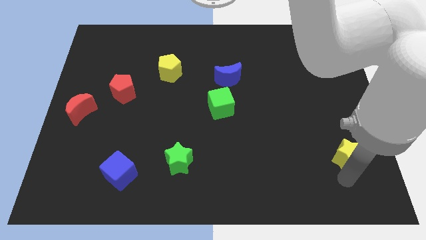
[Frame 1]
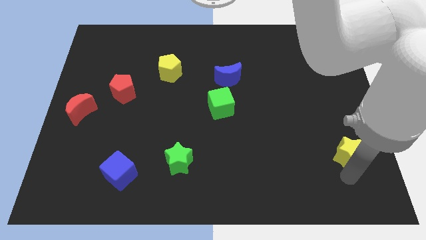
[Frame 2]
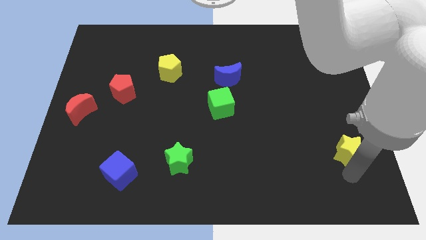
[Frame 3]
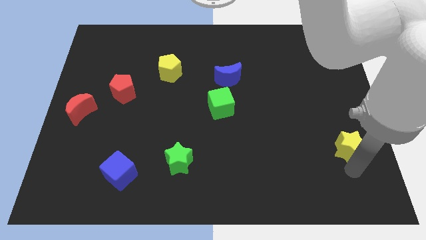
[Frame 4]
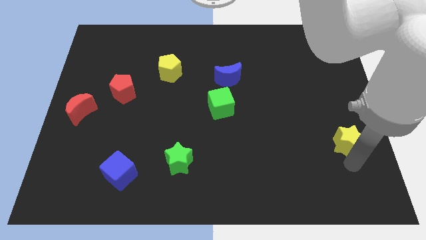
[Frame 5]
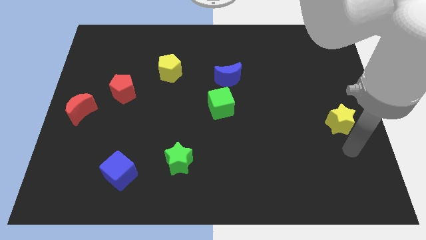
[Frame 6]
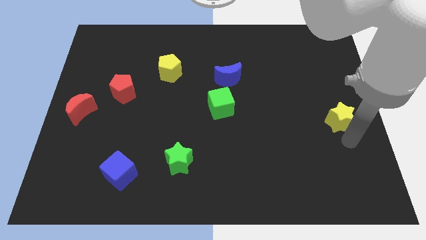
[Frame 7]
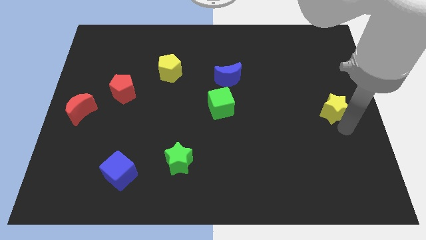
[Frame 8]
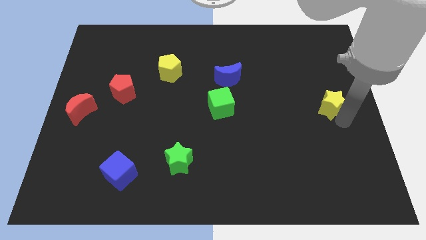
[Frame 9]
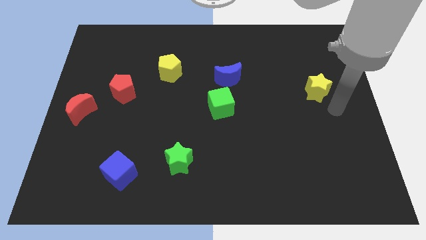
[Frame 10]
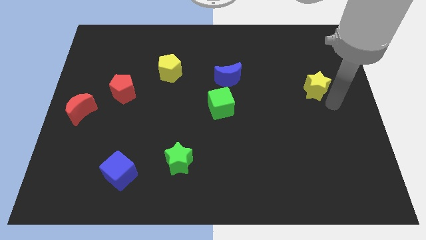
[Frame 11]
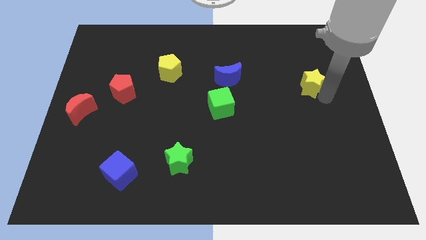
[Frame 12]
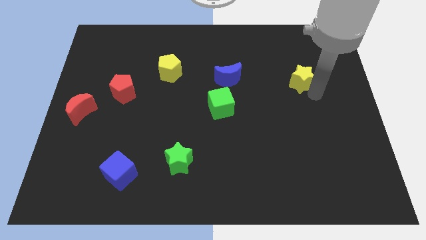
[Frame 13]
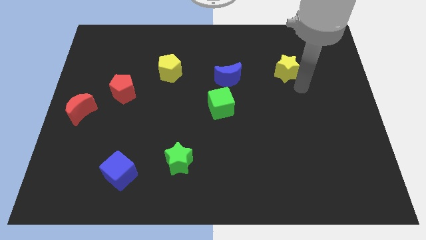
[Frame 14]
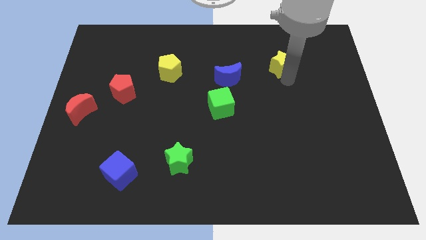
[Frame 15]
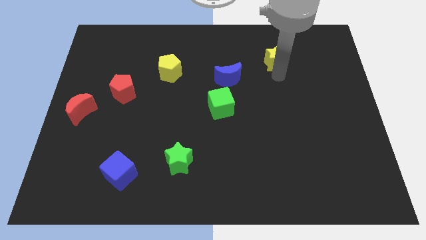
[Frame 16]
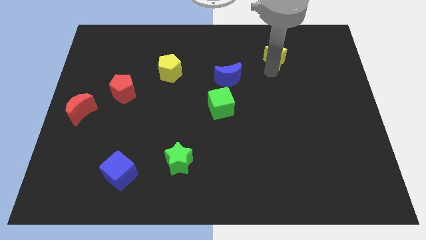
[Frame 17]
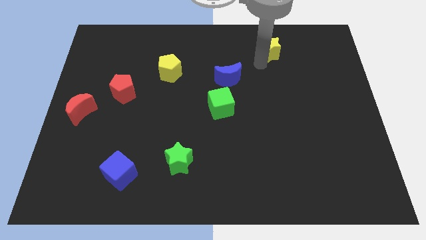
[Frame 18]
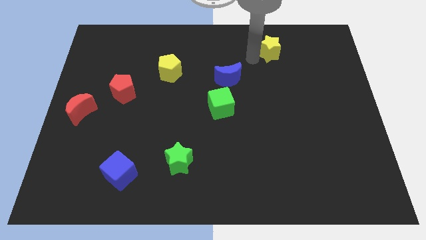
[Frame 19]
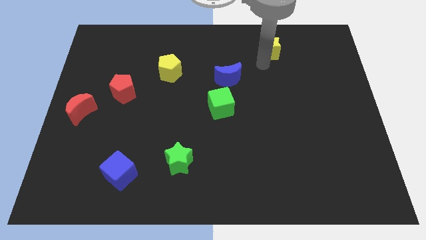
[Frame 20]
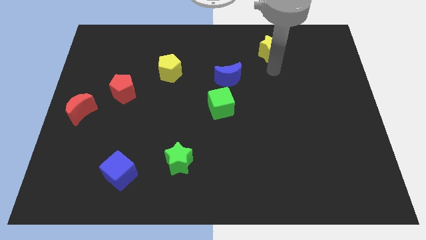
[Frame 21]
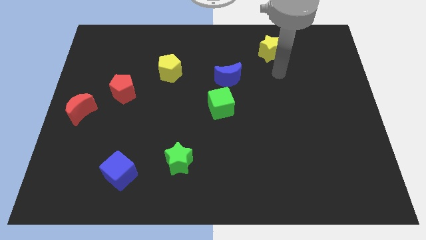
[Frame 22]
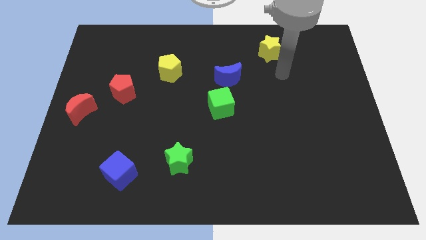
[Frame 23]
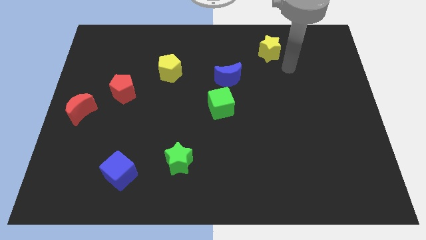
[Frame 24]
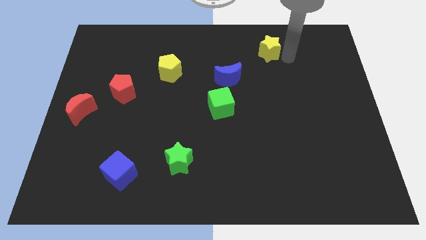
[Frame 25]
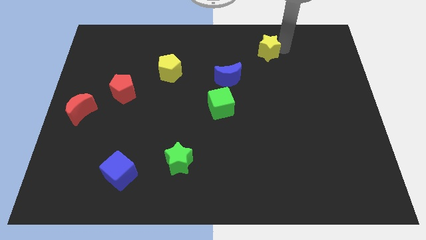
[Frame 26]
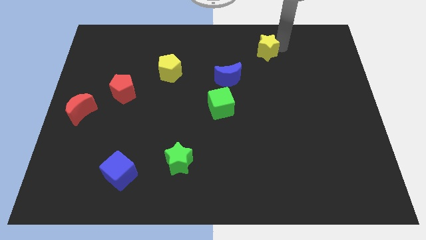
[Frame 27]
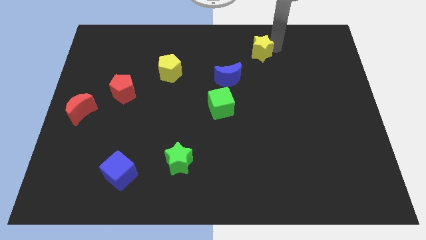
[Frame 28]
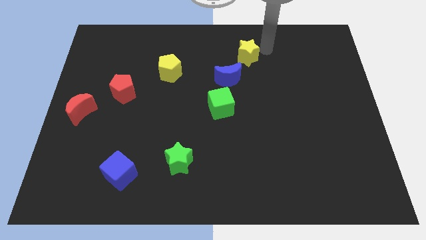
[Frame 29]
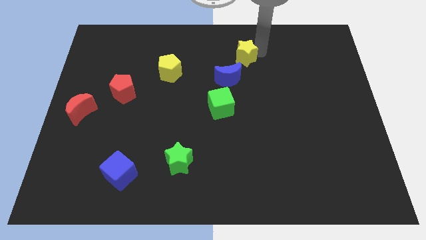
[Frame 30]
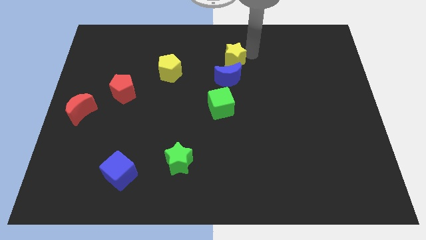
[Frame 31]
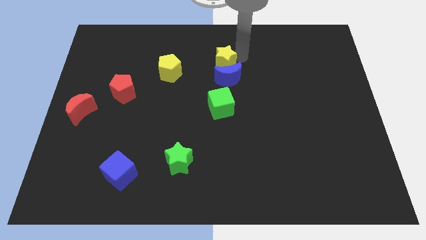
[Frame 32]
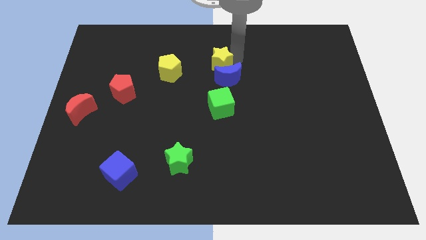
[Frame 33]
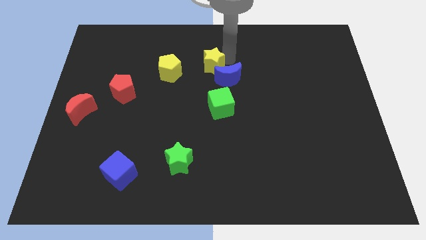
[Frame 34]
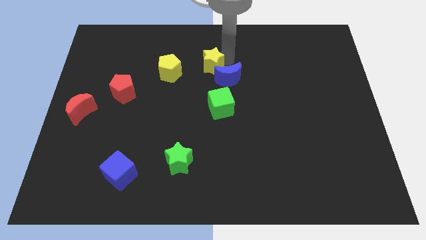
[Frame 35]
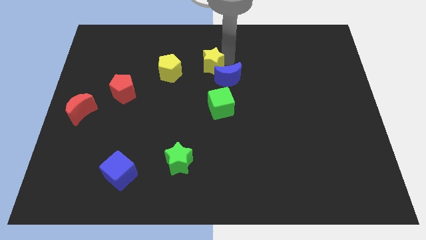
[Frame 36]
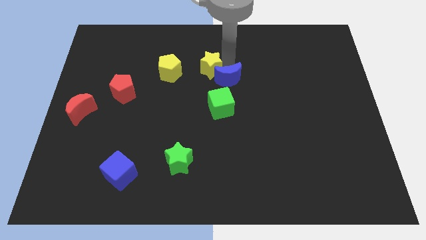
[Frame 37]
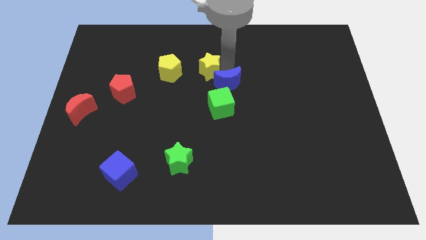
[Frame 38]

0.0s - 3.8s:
place the yellow star to the right of the yellow pentagon

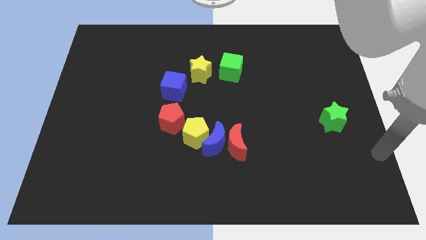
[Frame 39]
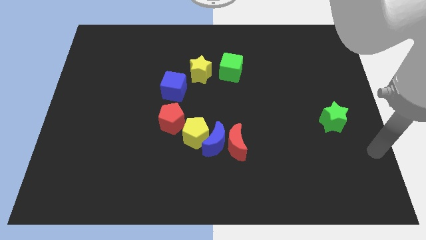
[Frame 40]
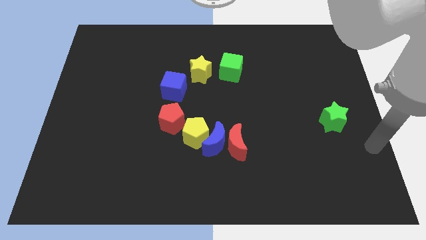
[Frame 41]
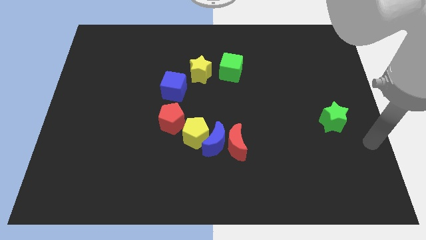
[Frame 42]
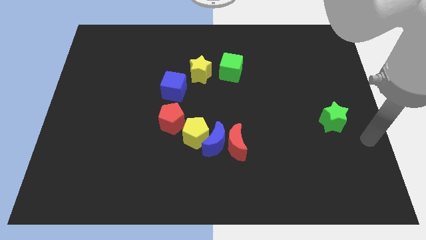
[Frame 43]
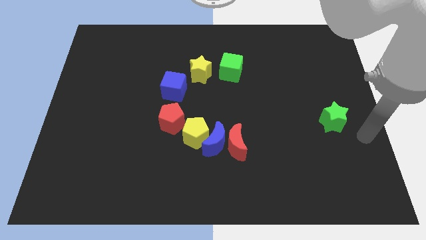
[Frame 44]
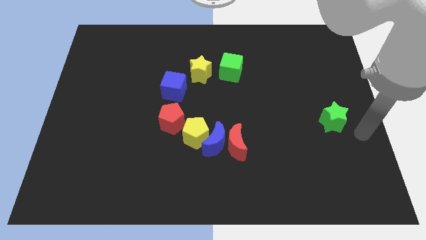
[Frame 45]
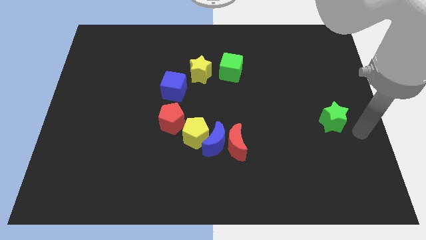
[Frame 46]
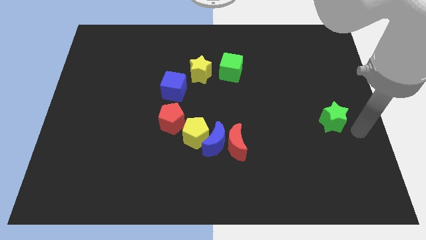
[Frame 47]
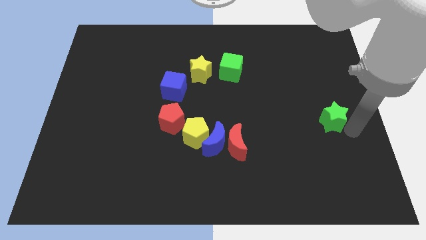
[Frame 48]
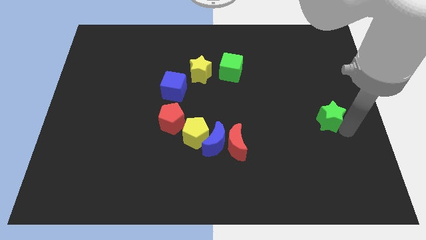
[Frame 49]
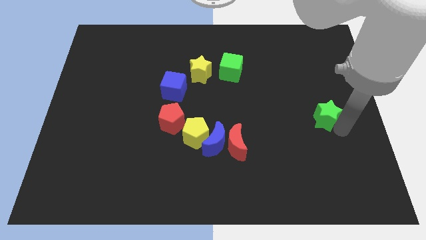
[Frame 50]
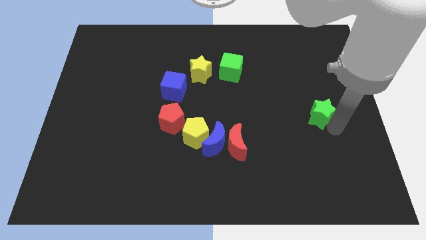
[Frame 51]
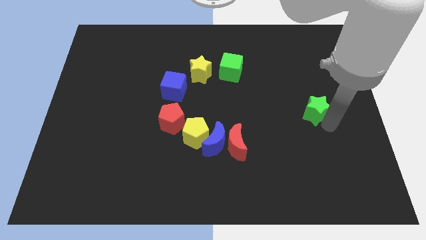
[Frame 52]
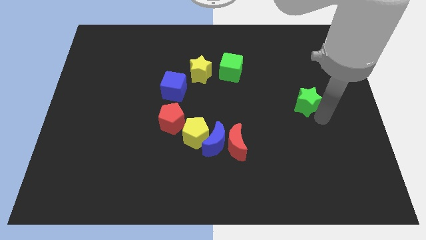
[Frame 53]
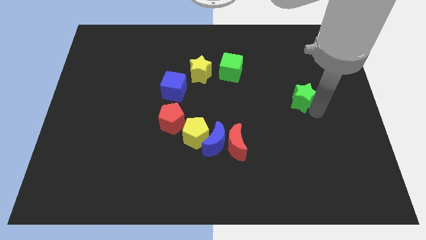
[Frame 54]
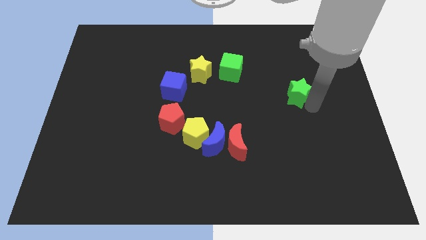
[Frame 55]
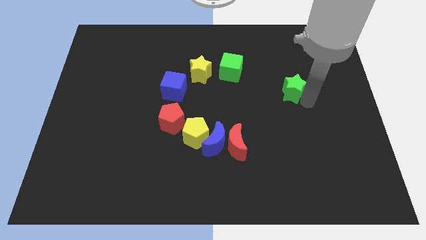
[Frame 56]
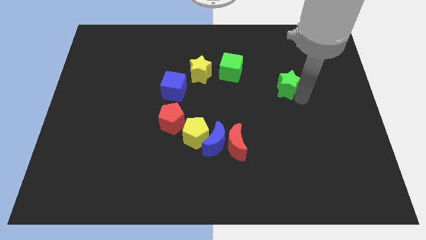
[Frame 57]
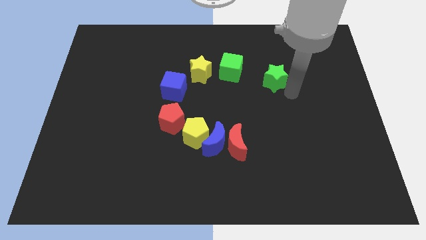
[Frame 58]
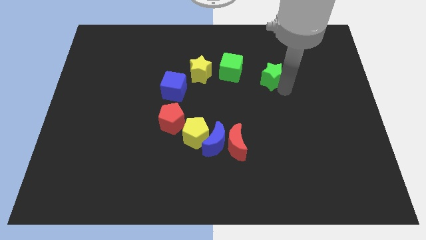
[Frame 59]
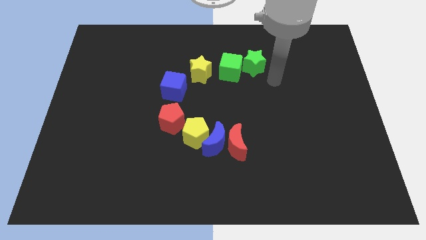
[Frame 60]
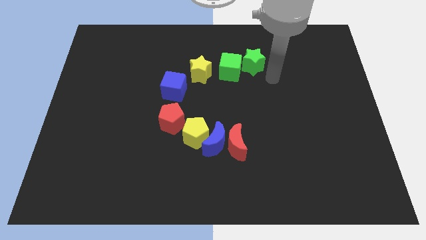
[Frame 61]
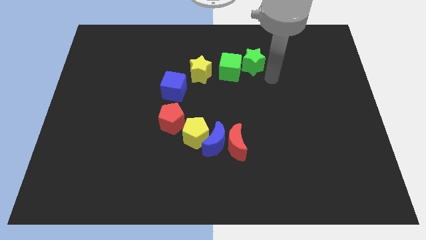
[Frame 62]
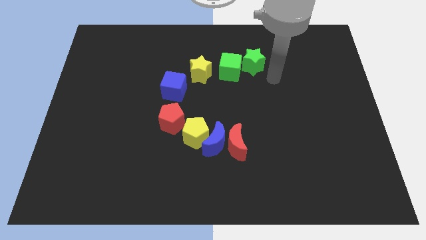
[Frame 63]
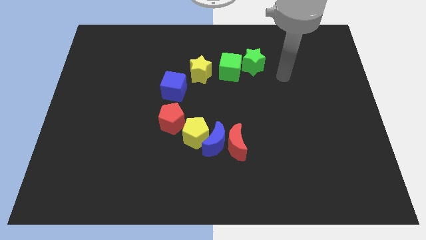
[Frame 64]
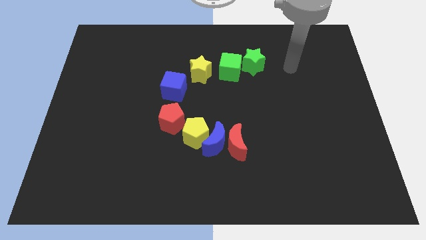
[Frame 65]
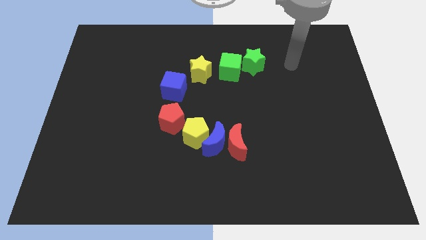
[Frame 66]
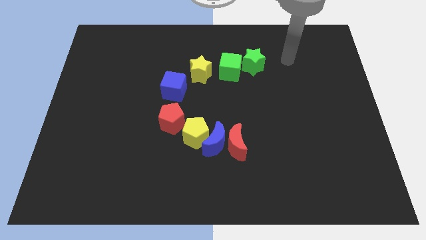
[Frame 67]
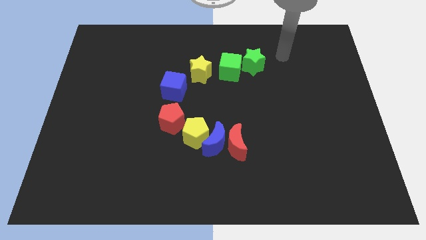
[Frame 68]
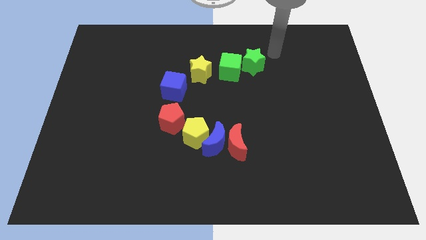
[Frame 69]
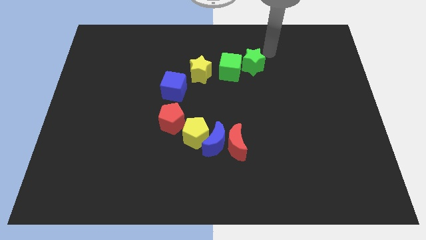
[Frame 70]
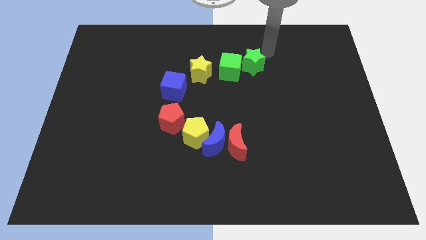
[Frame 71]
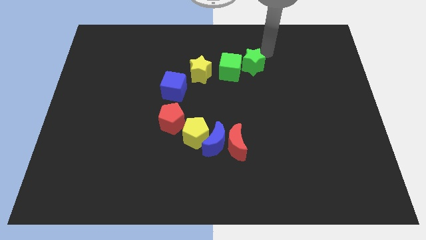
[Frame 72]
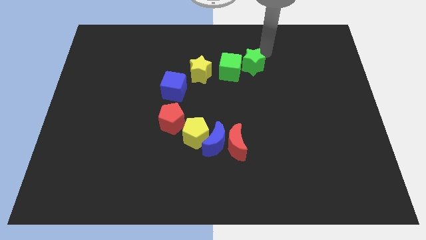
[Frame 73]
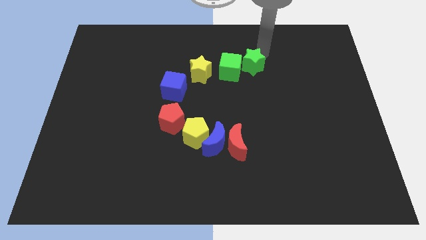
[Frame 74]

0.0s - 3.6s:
push the green star close to the green cube

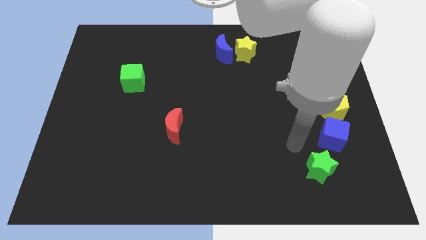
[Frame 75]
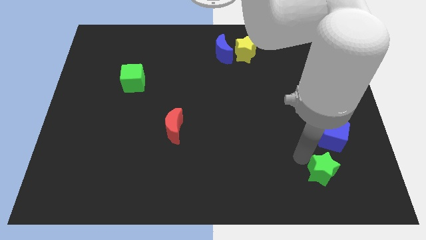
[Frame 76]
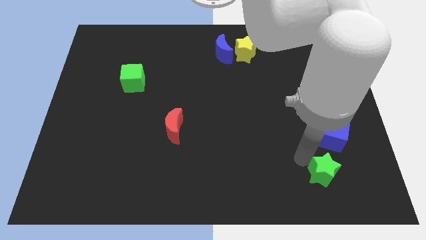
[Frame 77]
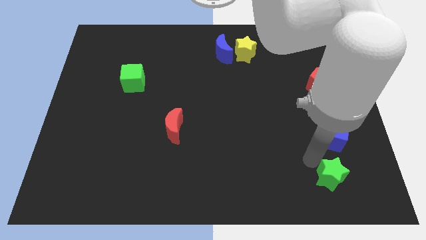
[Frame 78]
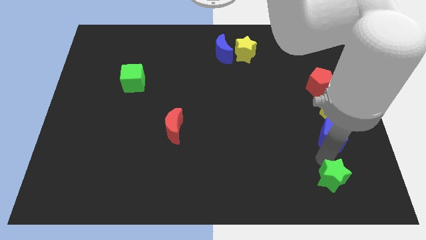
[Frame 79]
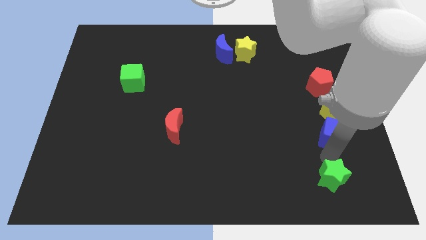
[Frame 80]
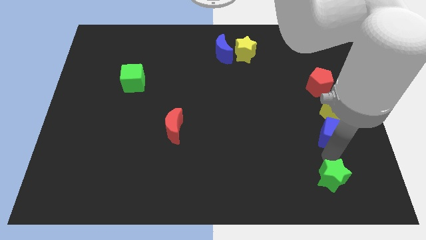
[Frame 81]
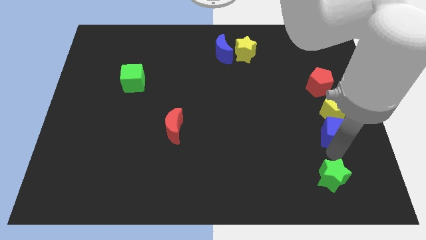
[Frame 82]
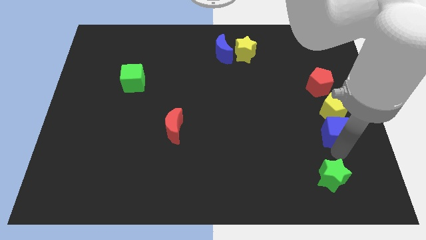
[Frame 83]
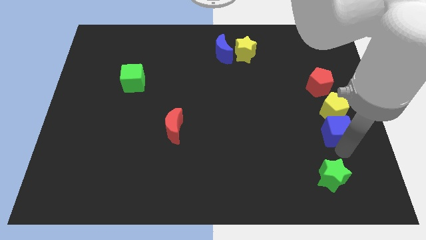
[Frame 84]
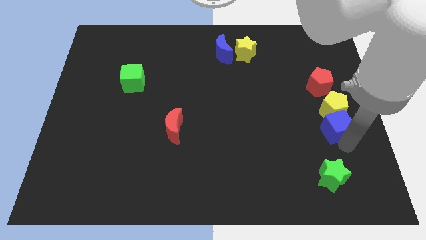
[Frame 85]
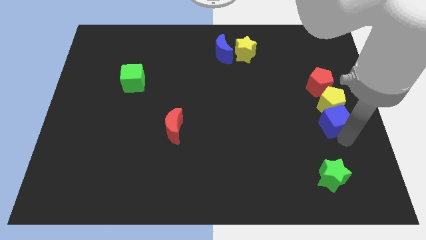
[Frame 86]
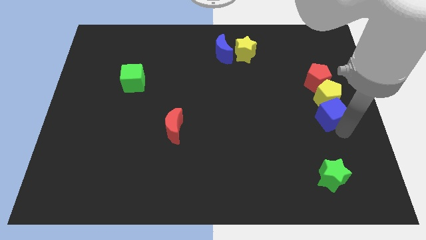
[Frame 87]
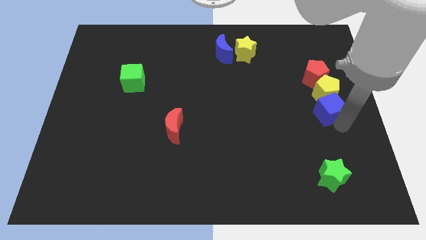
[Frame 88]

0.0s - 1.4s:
push the blue cube into the yellow pentagon

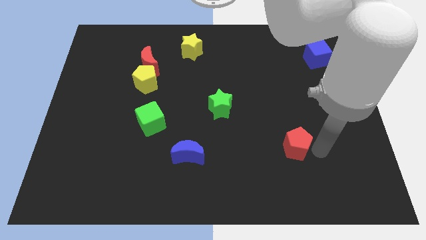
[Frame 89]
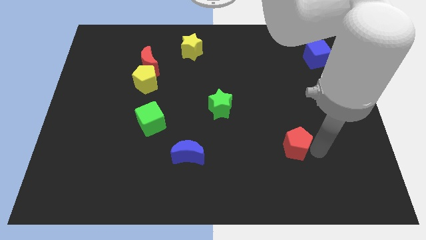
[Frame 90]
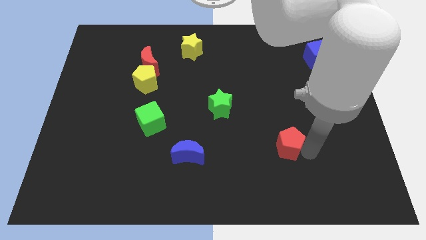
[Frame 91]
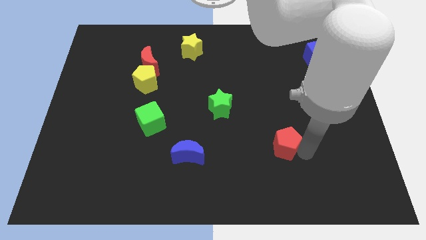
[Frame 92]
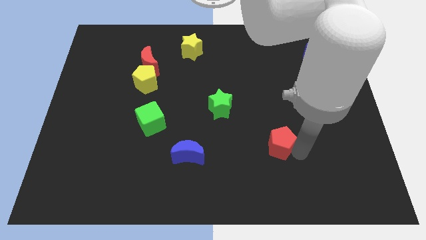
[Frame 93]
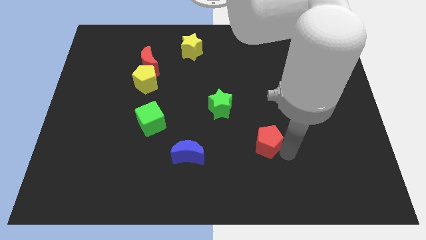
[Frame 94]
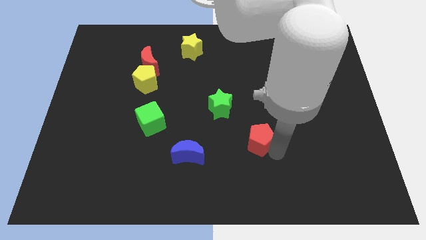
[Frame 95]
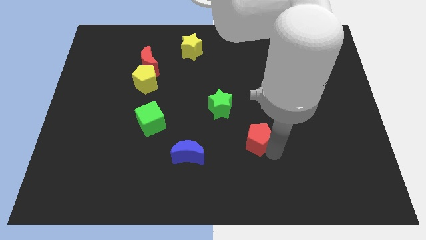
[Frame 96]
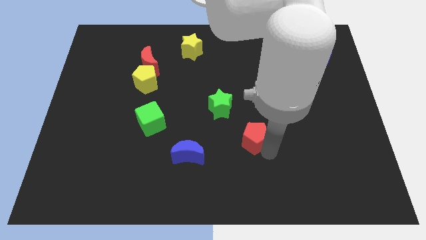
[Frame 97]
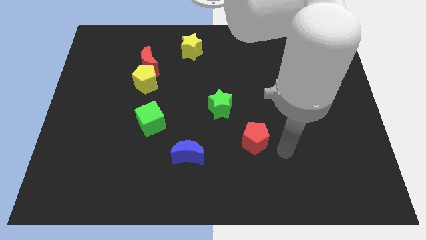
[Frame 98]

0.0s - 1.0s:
place the red pentagon diagonal to the green star
